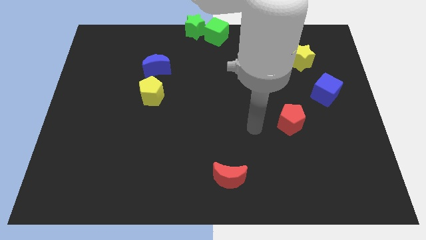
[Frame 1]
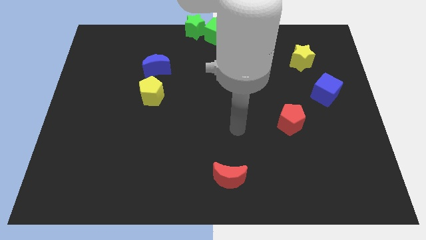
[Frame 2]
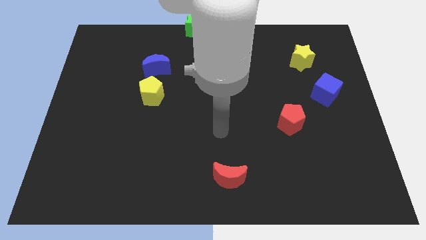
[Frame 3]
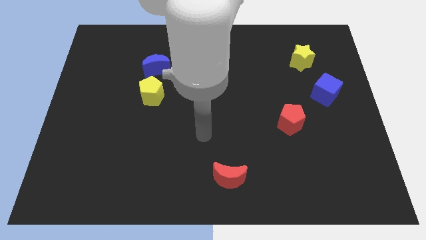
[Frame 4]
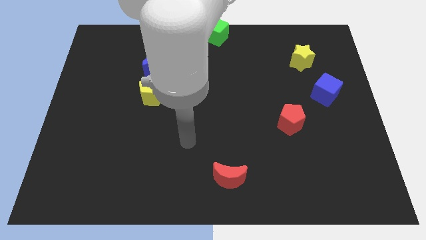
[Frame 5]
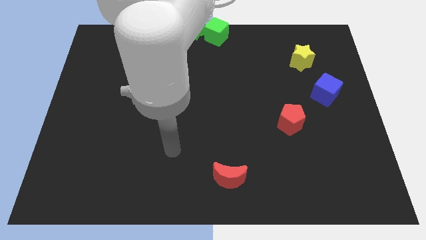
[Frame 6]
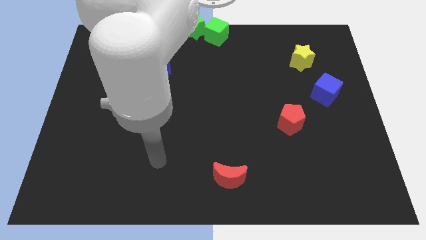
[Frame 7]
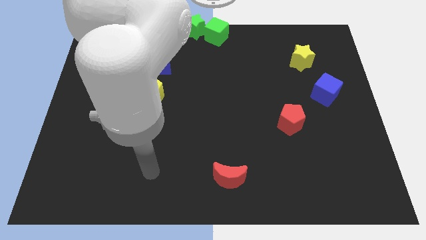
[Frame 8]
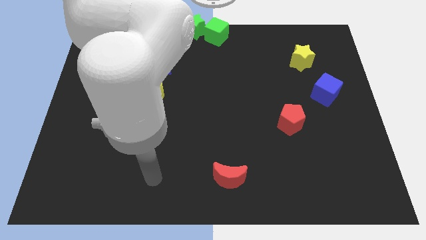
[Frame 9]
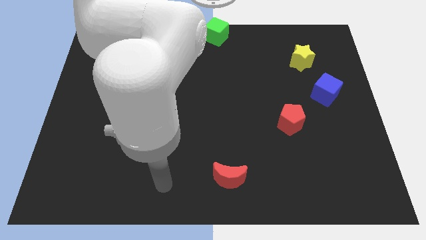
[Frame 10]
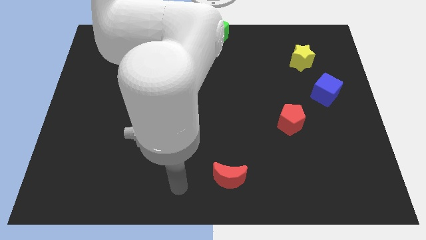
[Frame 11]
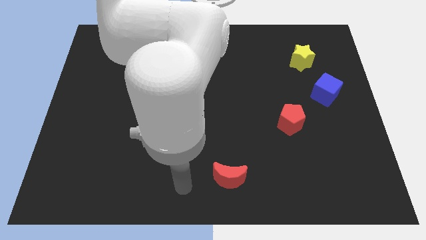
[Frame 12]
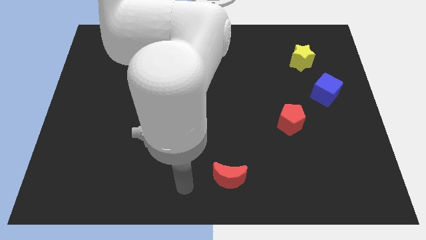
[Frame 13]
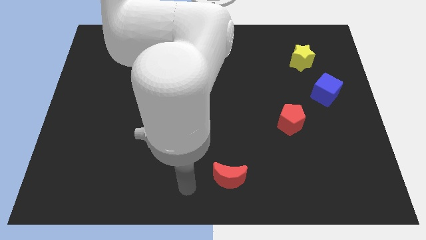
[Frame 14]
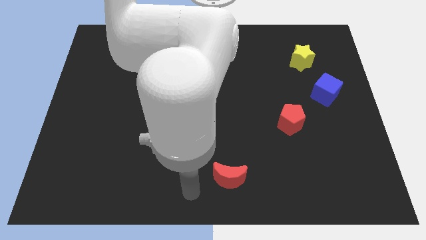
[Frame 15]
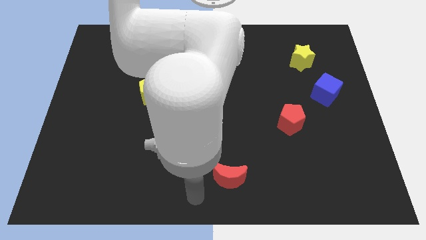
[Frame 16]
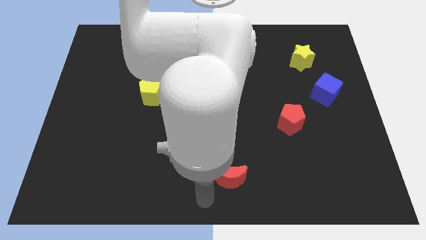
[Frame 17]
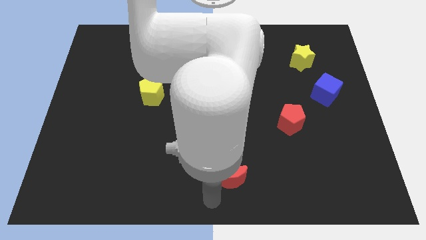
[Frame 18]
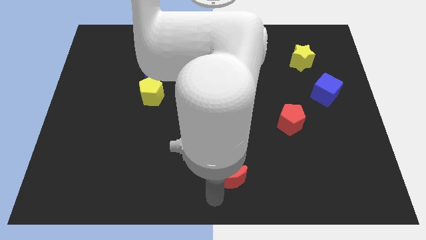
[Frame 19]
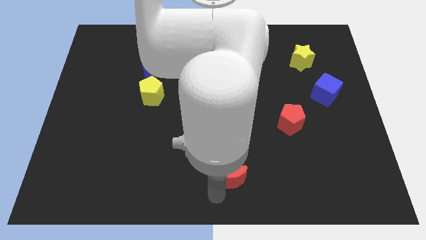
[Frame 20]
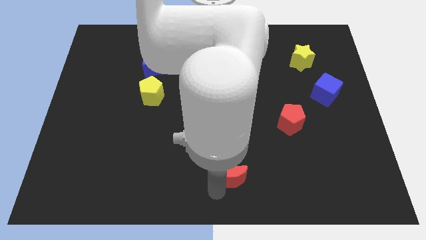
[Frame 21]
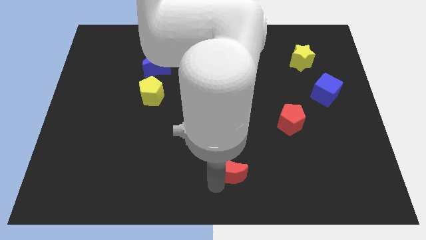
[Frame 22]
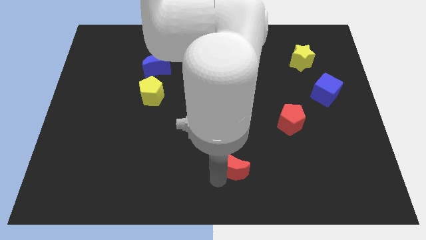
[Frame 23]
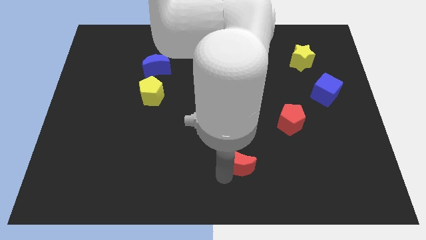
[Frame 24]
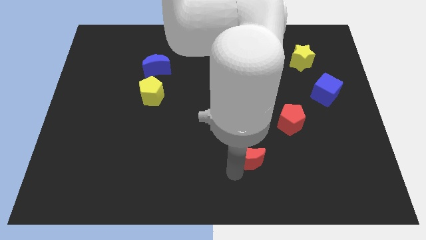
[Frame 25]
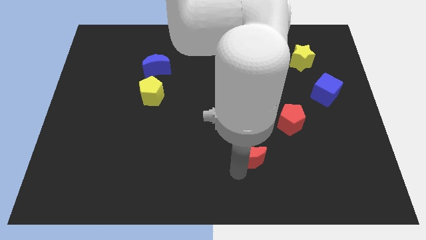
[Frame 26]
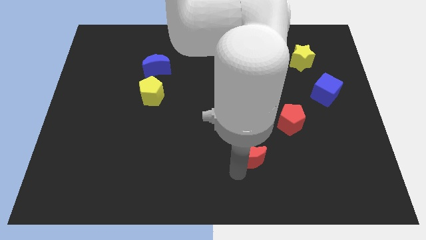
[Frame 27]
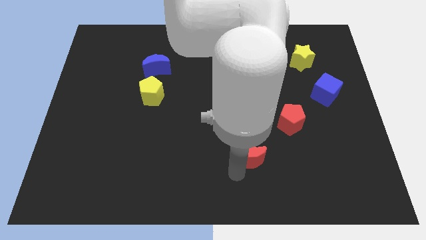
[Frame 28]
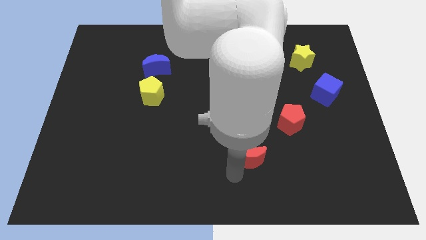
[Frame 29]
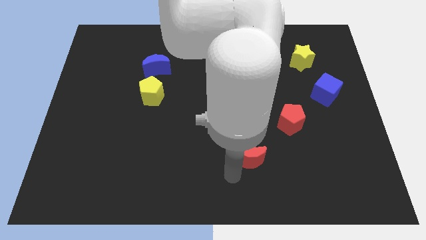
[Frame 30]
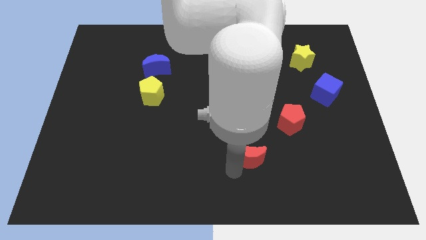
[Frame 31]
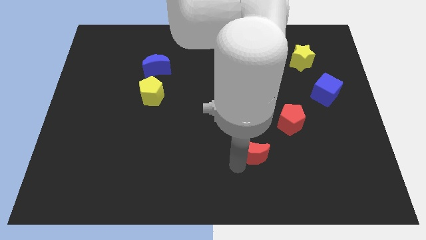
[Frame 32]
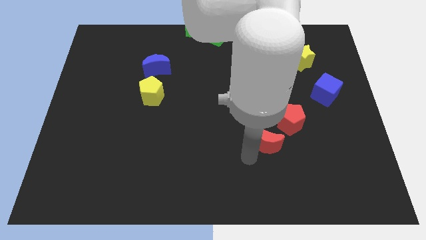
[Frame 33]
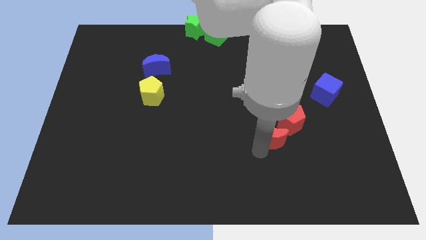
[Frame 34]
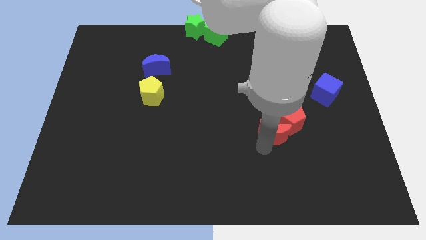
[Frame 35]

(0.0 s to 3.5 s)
push the red crescent into the red pentagon

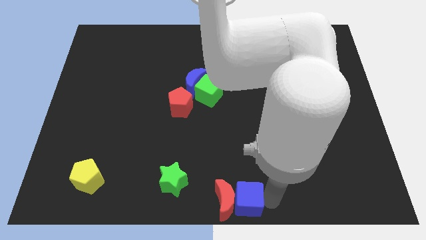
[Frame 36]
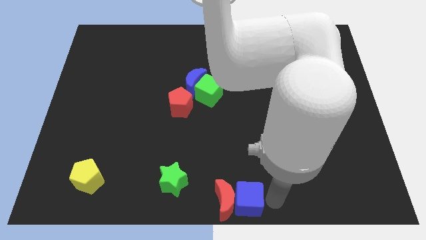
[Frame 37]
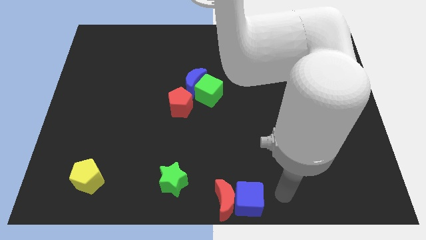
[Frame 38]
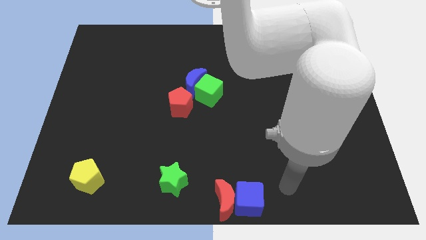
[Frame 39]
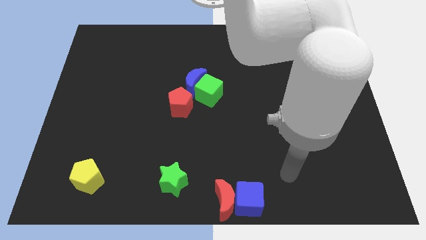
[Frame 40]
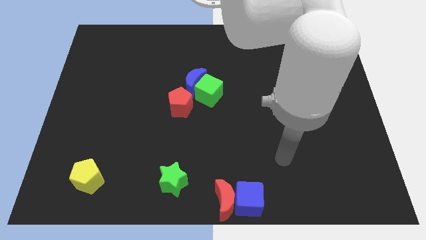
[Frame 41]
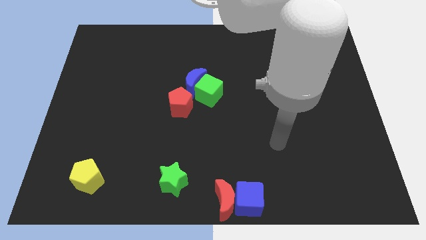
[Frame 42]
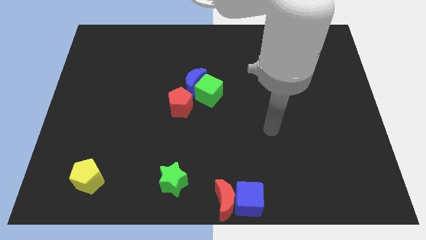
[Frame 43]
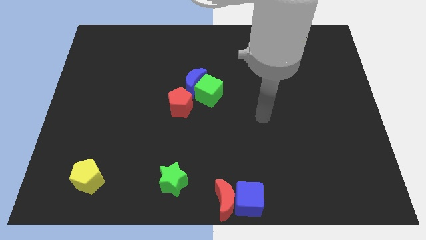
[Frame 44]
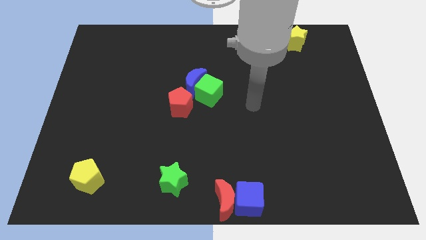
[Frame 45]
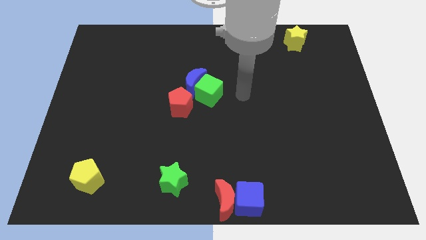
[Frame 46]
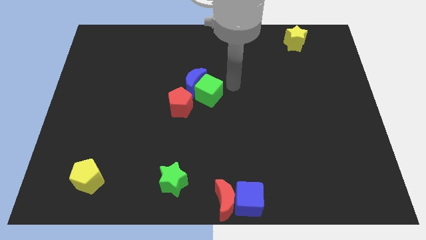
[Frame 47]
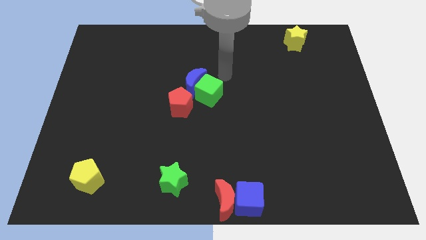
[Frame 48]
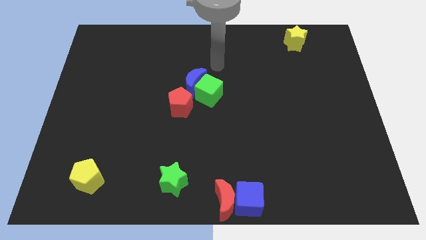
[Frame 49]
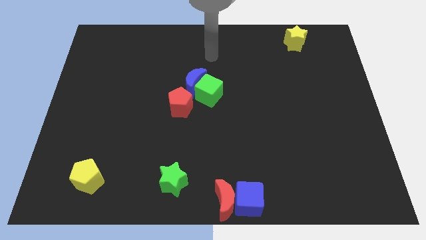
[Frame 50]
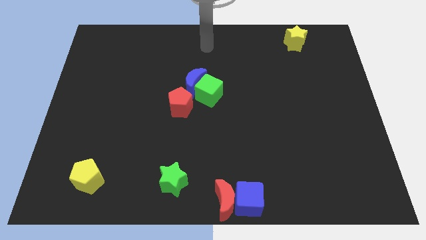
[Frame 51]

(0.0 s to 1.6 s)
move your arm away from the blue cube

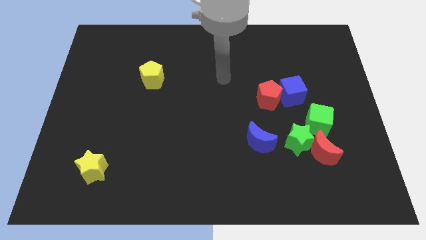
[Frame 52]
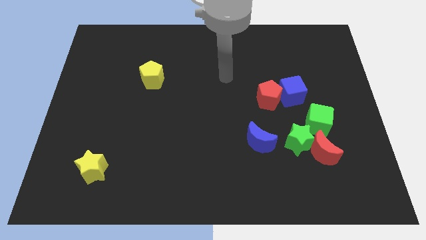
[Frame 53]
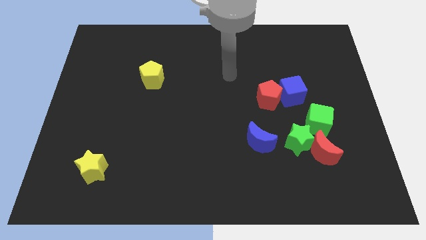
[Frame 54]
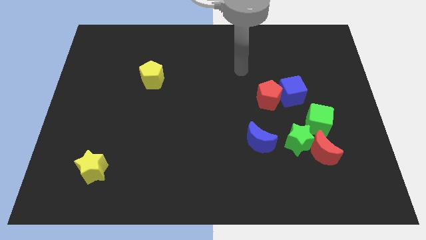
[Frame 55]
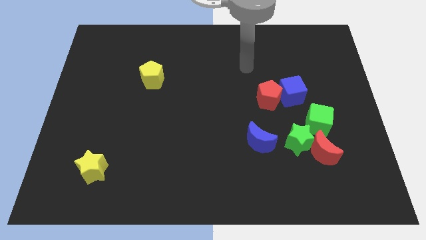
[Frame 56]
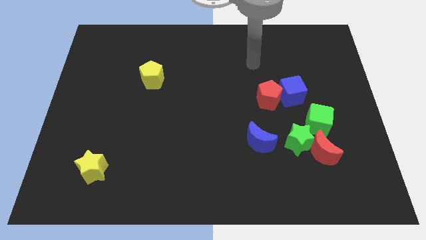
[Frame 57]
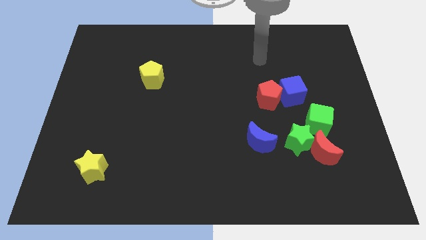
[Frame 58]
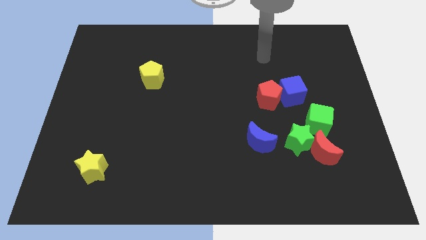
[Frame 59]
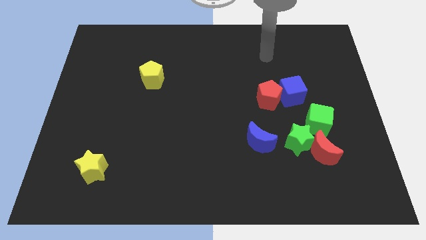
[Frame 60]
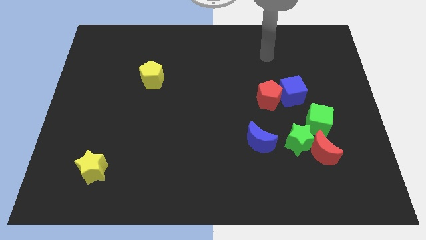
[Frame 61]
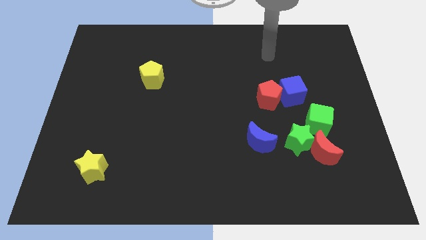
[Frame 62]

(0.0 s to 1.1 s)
point your arm at the top side of the red pentagon

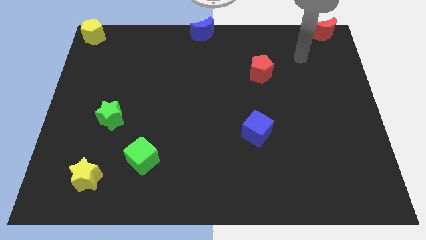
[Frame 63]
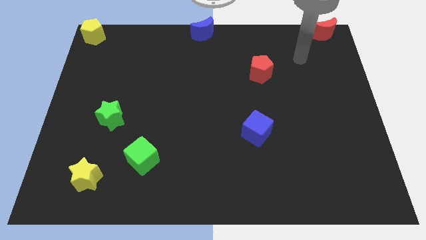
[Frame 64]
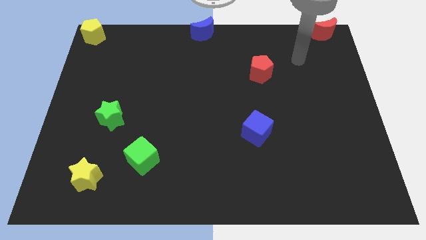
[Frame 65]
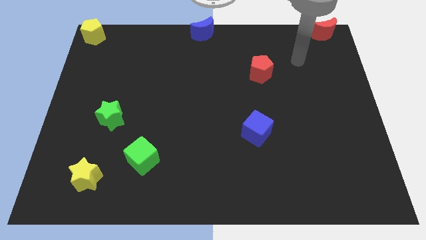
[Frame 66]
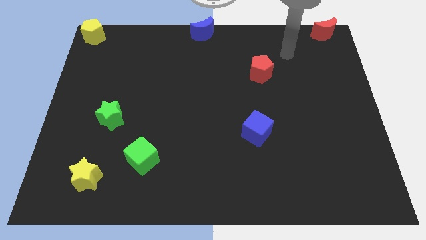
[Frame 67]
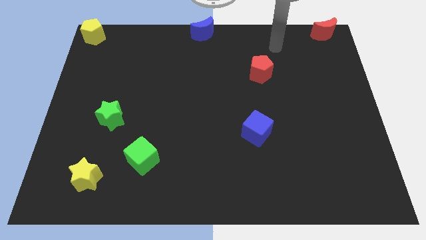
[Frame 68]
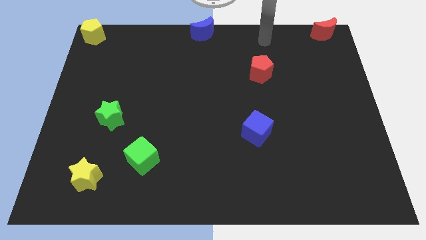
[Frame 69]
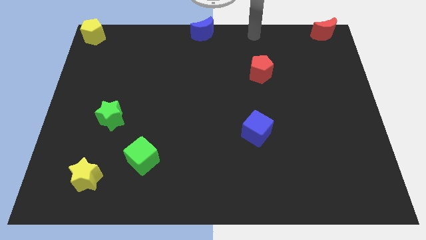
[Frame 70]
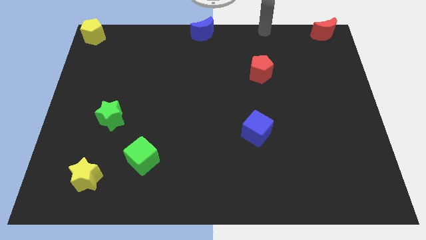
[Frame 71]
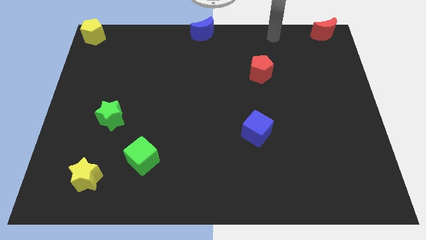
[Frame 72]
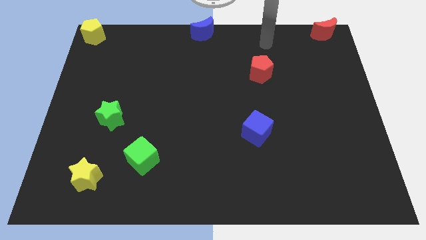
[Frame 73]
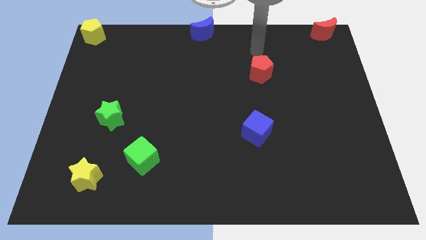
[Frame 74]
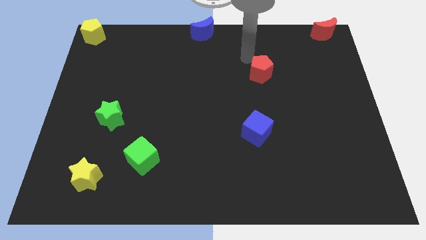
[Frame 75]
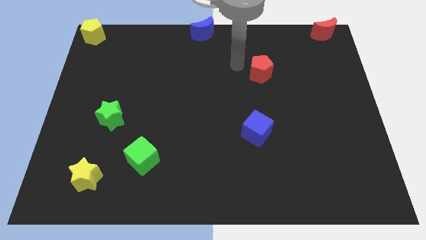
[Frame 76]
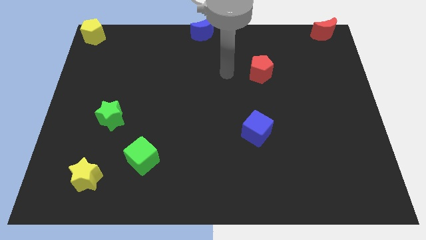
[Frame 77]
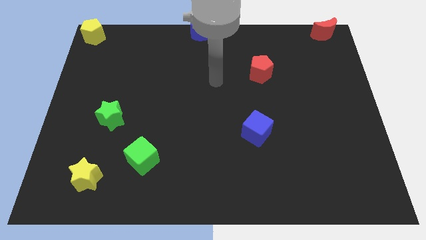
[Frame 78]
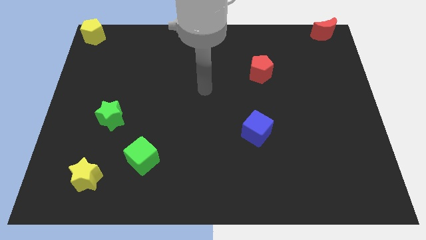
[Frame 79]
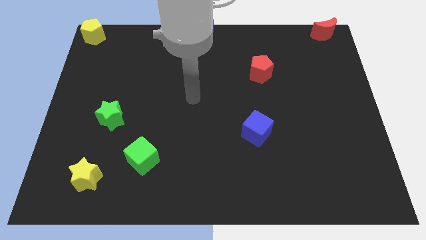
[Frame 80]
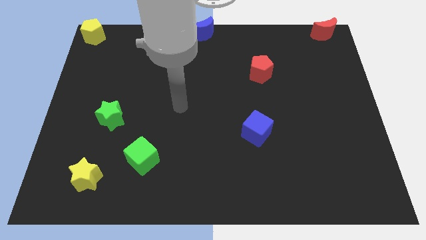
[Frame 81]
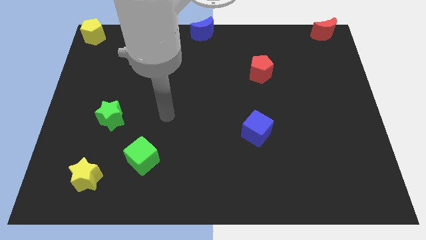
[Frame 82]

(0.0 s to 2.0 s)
place your arm to the right of green star

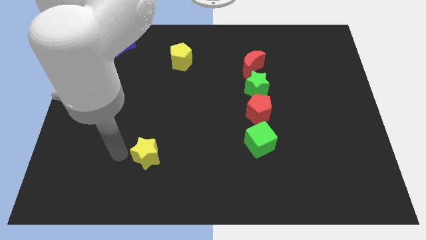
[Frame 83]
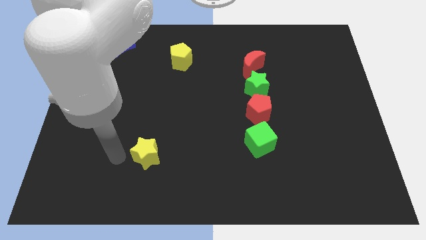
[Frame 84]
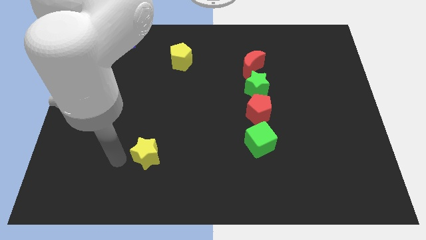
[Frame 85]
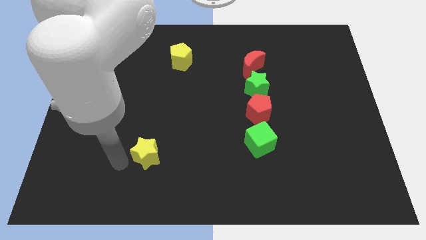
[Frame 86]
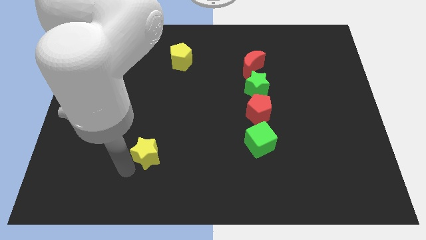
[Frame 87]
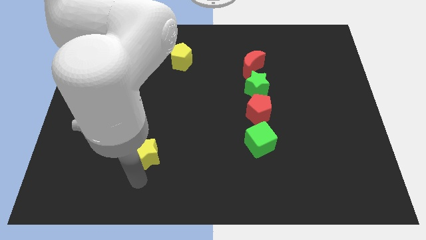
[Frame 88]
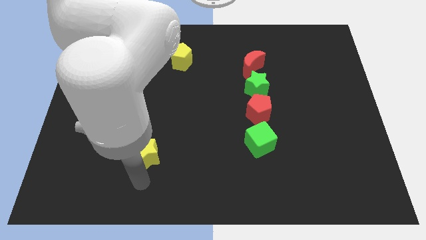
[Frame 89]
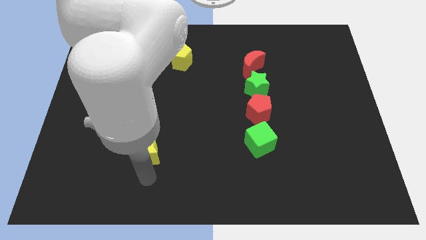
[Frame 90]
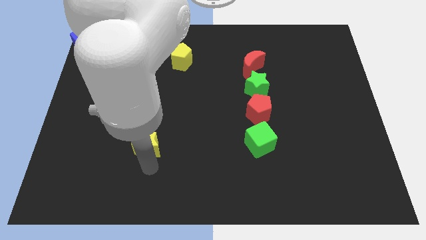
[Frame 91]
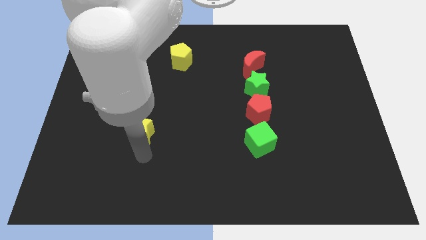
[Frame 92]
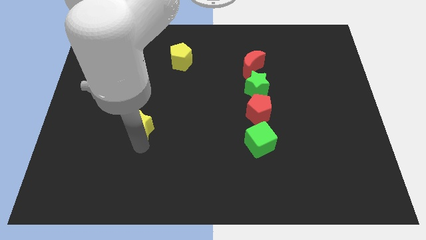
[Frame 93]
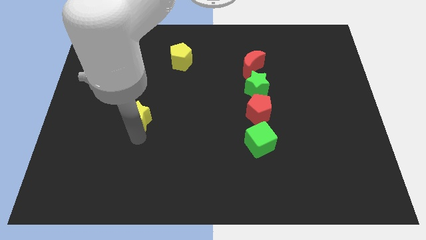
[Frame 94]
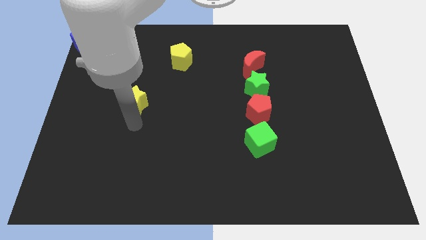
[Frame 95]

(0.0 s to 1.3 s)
drag the yellow star upwards
